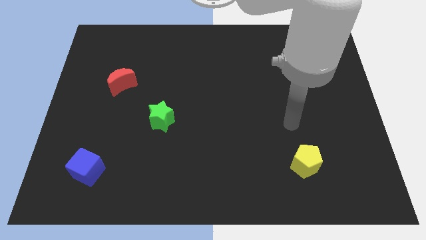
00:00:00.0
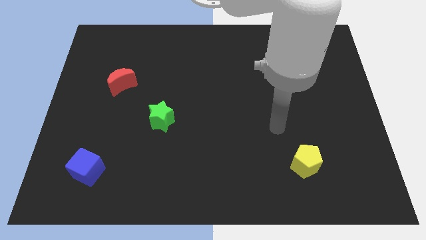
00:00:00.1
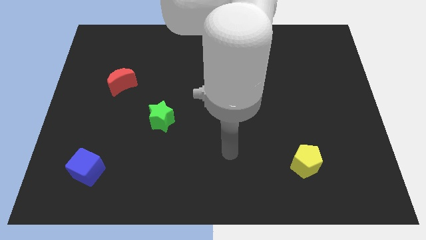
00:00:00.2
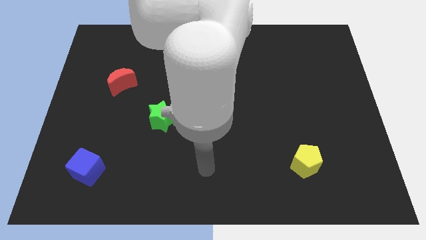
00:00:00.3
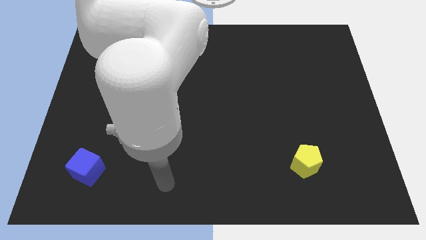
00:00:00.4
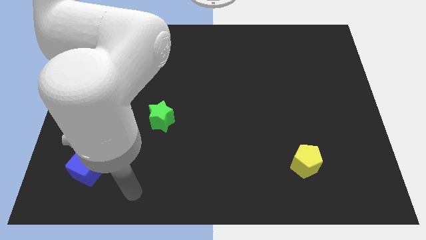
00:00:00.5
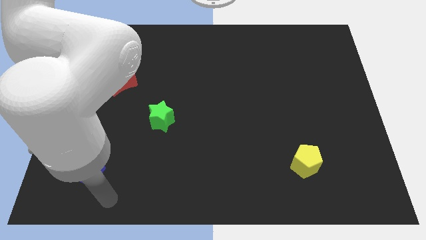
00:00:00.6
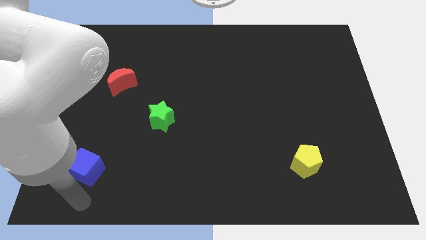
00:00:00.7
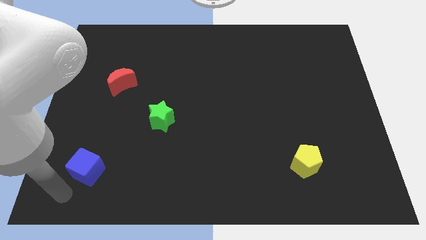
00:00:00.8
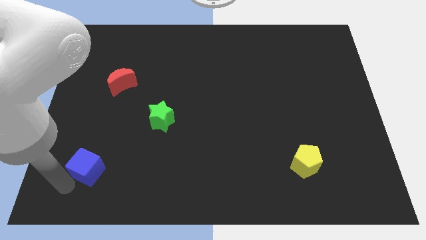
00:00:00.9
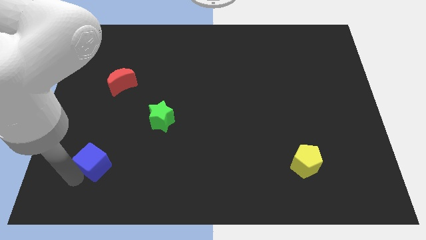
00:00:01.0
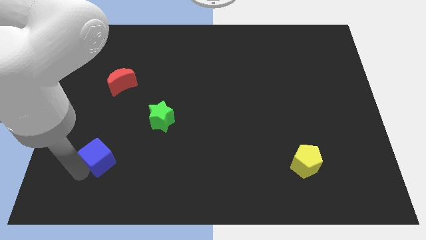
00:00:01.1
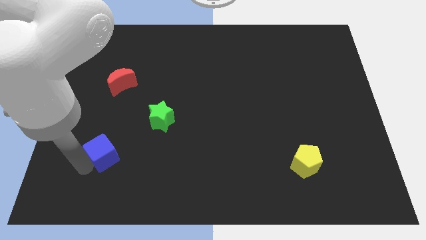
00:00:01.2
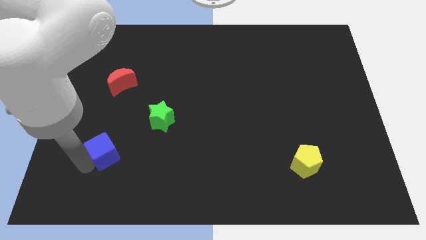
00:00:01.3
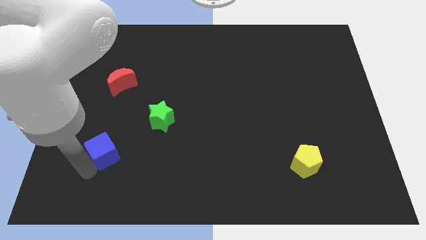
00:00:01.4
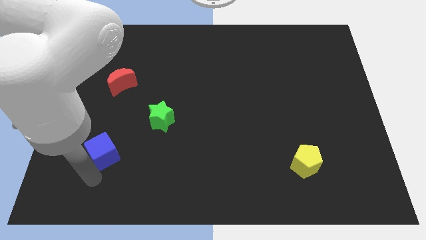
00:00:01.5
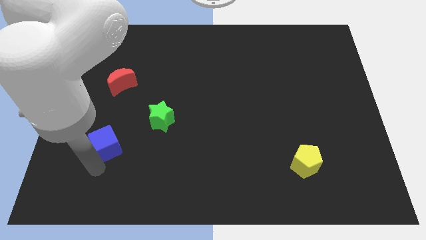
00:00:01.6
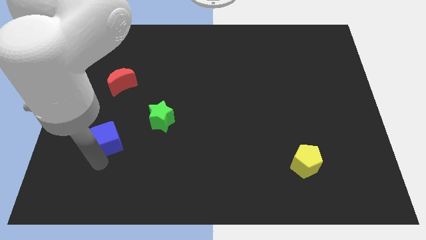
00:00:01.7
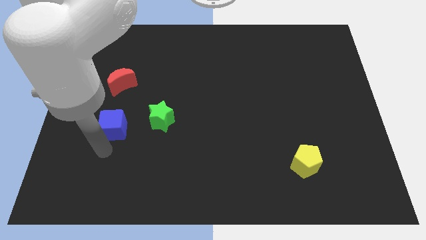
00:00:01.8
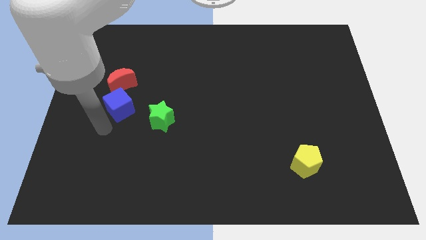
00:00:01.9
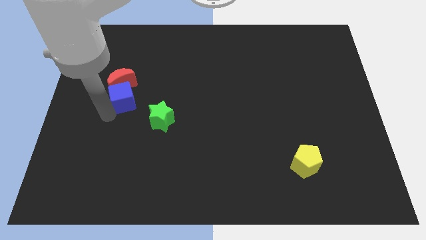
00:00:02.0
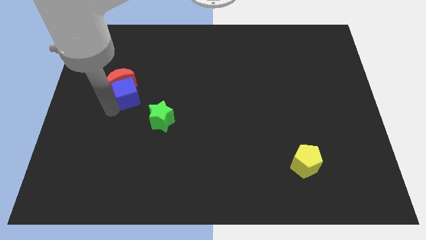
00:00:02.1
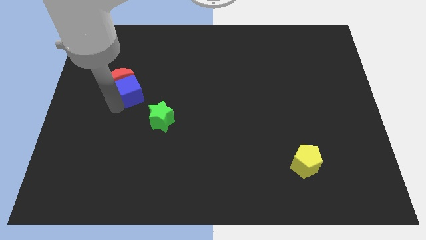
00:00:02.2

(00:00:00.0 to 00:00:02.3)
slide the cube next to the red block

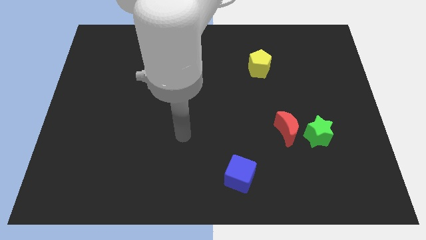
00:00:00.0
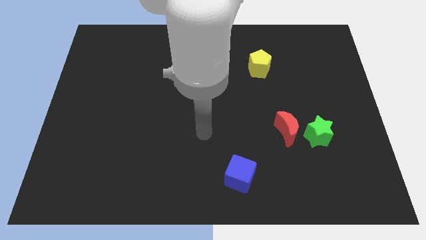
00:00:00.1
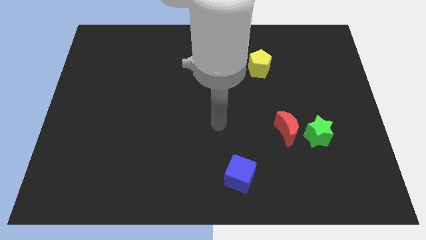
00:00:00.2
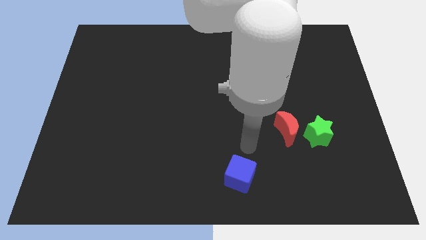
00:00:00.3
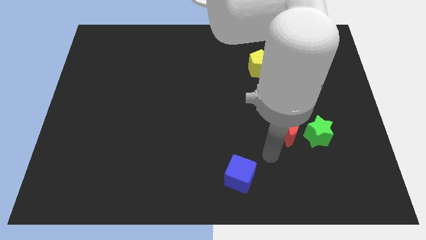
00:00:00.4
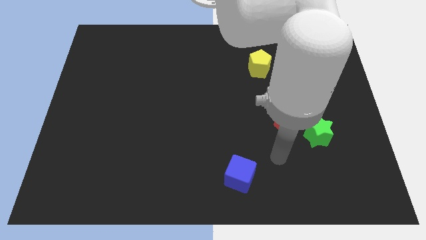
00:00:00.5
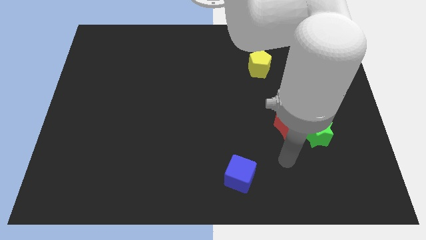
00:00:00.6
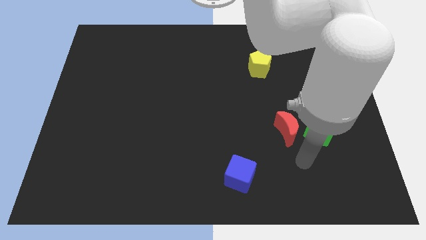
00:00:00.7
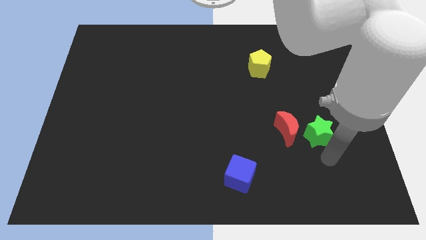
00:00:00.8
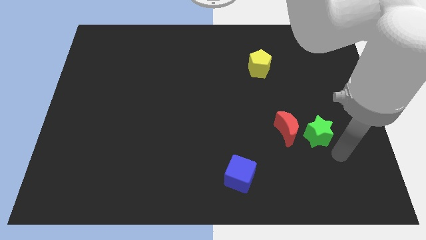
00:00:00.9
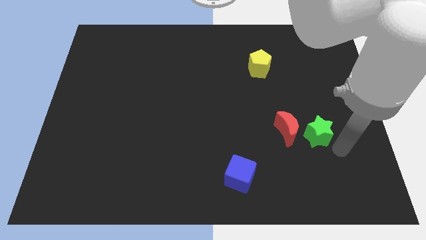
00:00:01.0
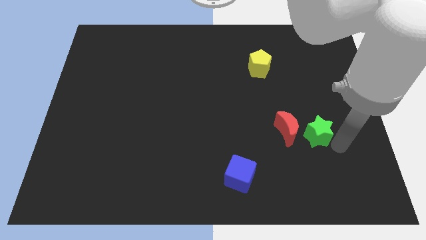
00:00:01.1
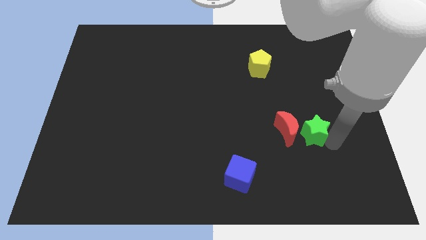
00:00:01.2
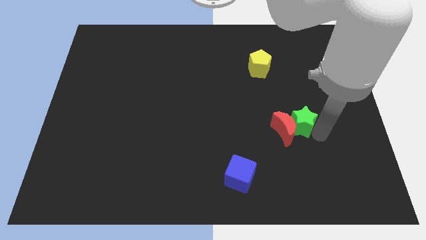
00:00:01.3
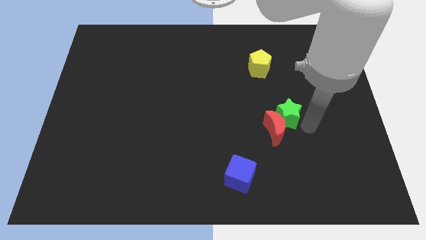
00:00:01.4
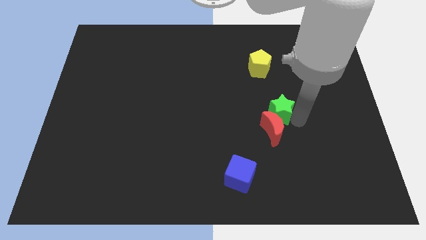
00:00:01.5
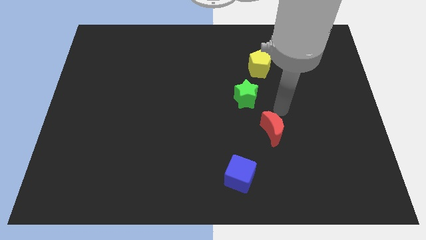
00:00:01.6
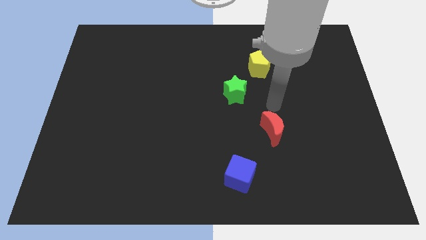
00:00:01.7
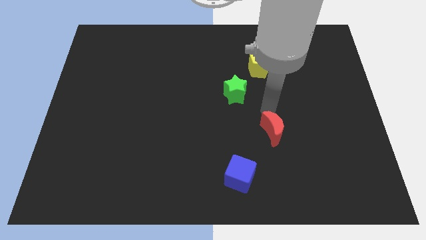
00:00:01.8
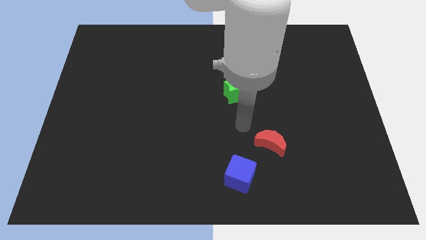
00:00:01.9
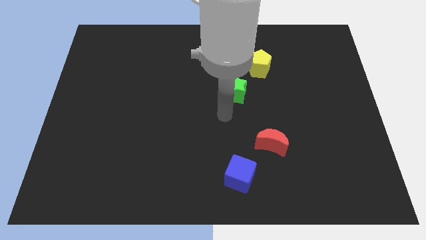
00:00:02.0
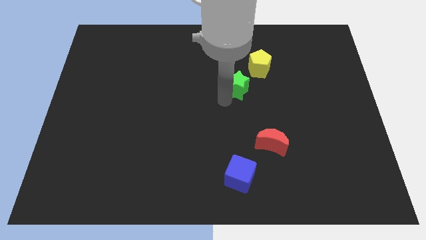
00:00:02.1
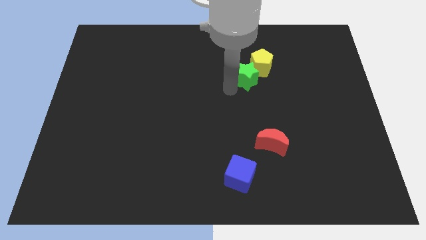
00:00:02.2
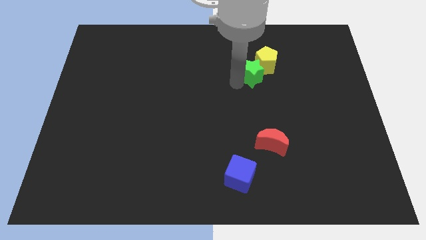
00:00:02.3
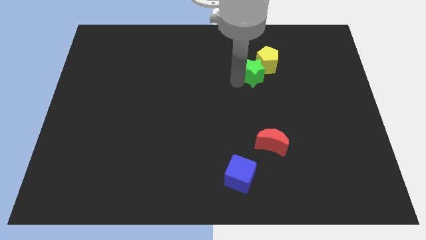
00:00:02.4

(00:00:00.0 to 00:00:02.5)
put the green block to the yellow pentagon

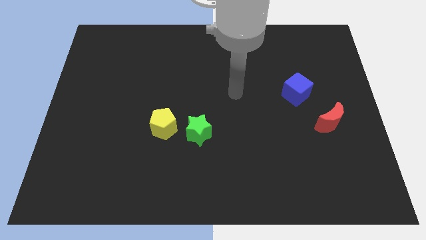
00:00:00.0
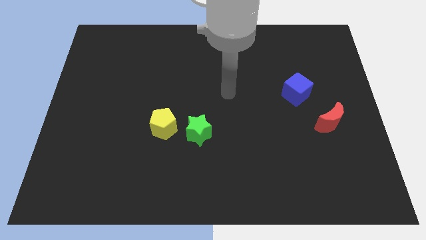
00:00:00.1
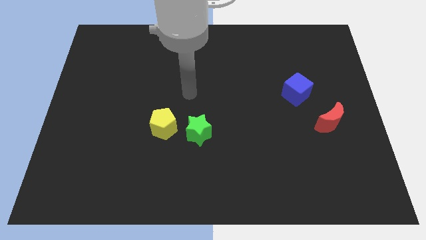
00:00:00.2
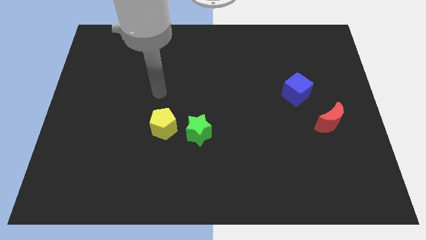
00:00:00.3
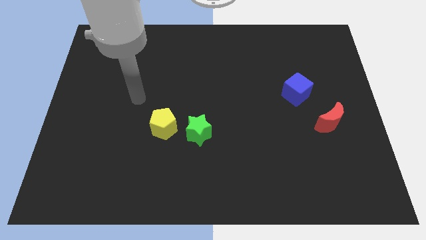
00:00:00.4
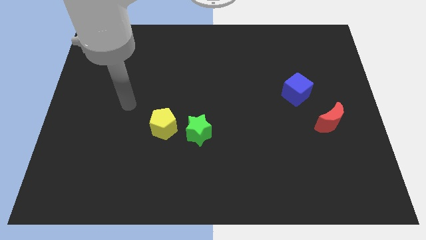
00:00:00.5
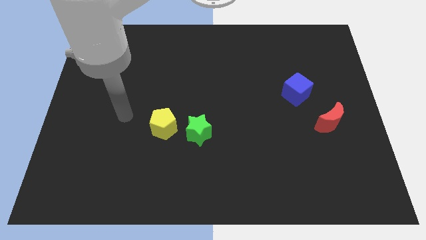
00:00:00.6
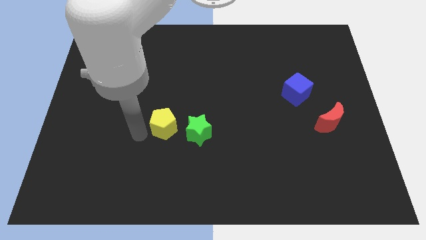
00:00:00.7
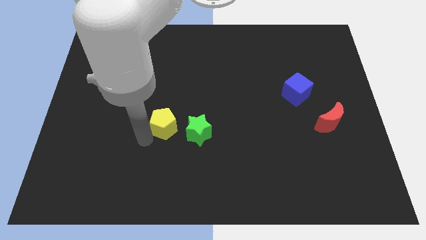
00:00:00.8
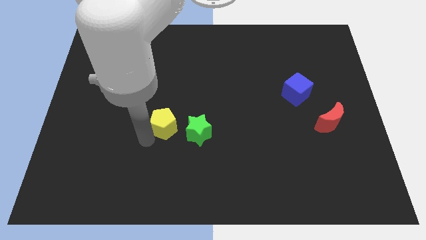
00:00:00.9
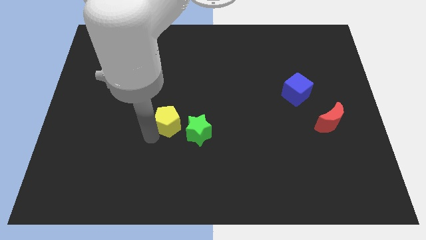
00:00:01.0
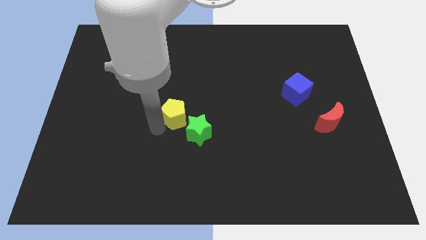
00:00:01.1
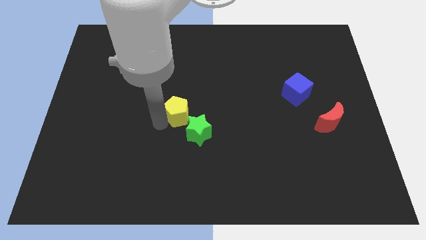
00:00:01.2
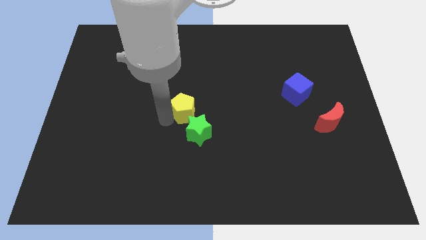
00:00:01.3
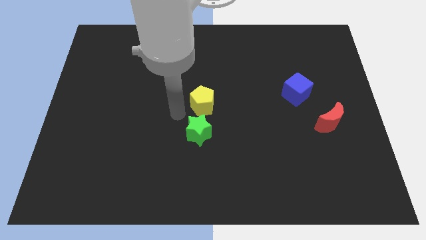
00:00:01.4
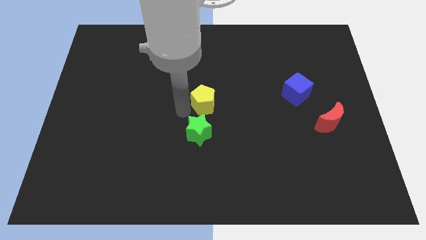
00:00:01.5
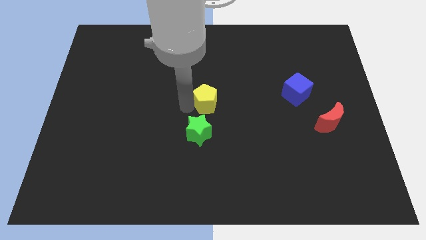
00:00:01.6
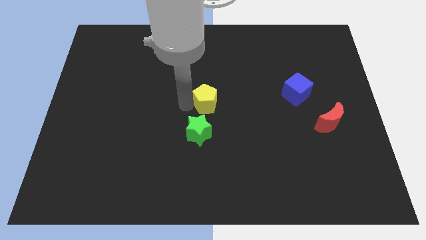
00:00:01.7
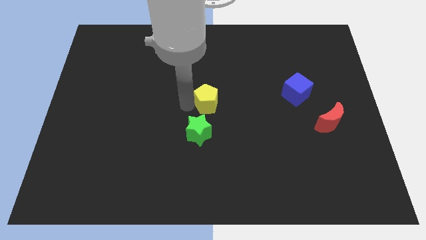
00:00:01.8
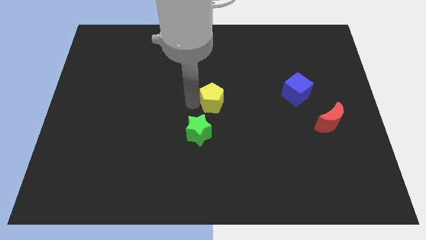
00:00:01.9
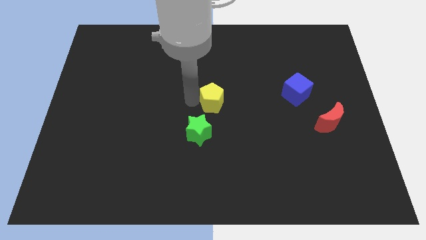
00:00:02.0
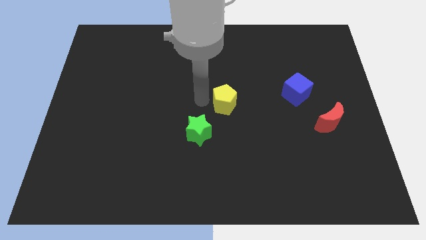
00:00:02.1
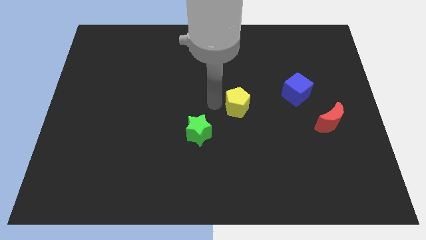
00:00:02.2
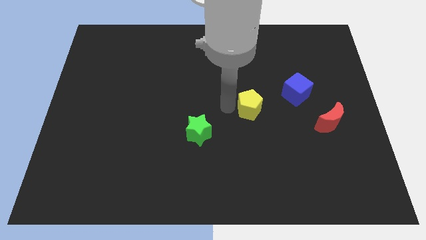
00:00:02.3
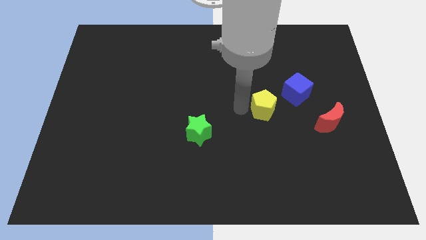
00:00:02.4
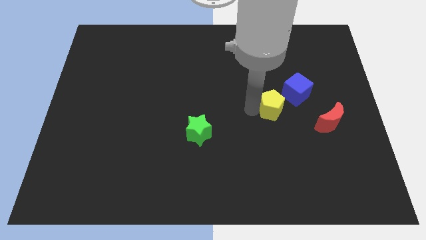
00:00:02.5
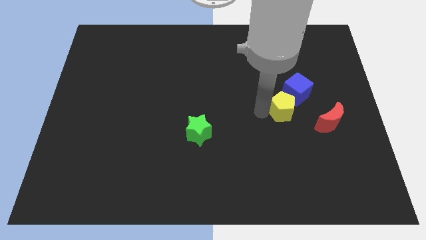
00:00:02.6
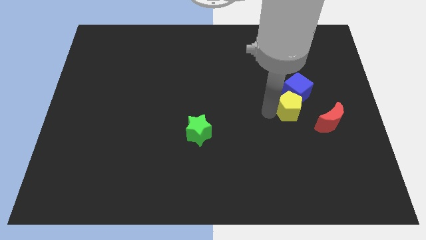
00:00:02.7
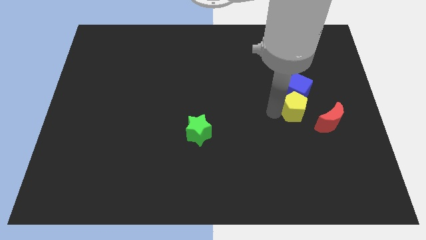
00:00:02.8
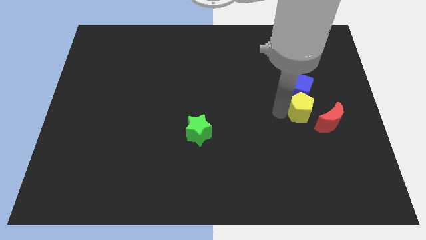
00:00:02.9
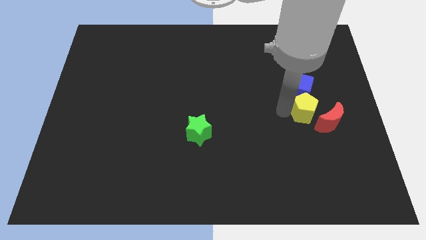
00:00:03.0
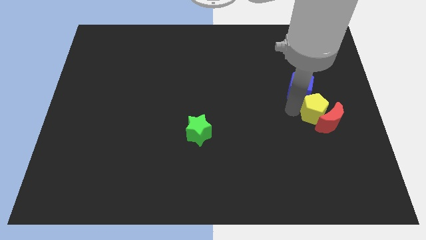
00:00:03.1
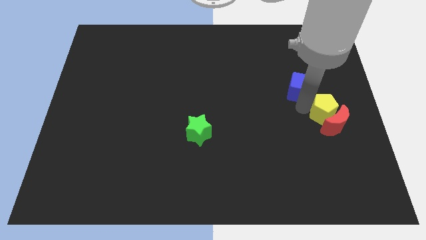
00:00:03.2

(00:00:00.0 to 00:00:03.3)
slide the yellow pentagon close to the red moon

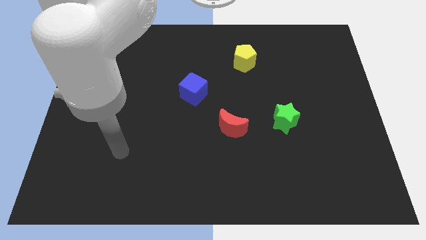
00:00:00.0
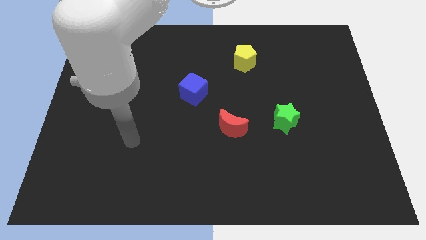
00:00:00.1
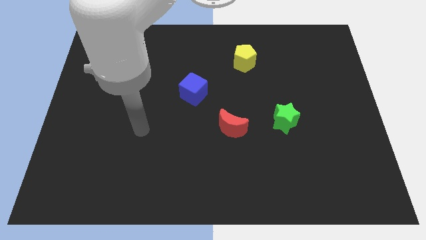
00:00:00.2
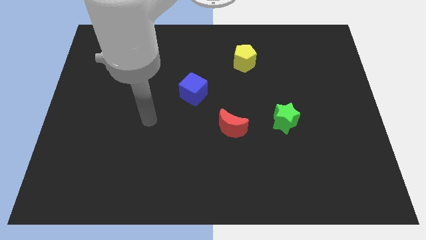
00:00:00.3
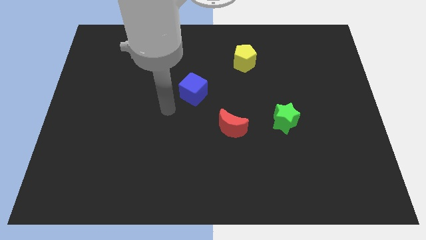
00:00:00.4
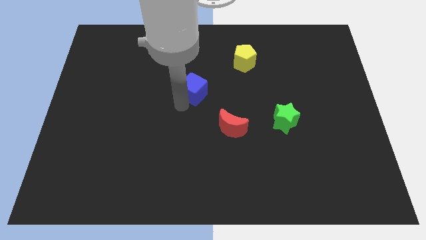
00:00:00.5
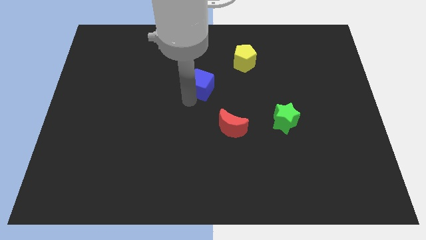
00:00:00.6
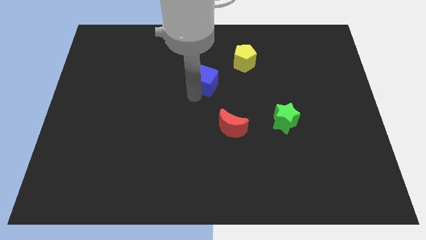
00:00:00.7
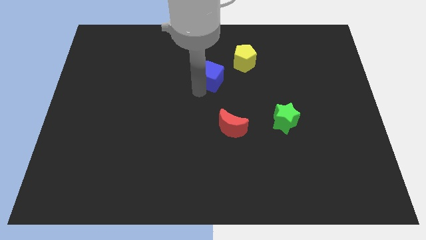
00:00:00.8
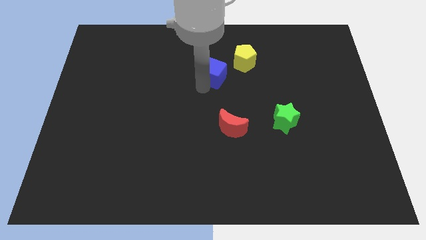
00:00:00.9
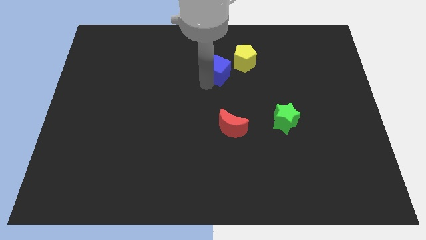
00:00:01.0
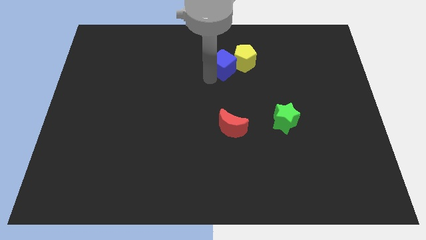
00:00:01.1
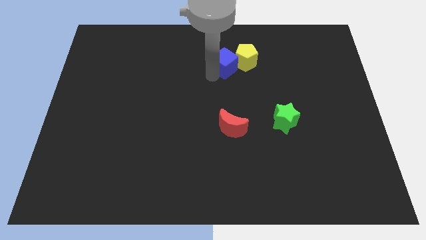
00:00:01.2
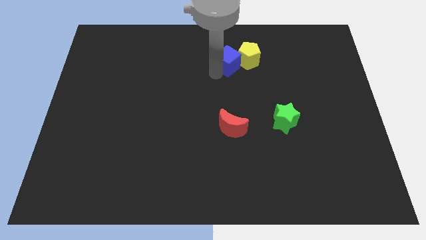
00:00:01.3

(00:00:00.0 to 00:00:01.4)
push the blue cube next to the yellow pentagon
